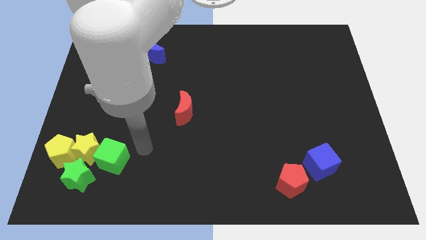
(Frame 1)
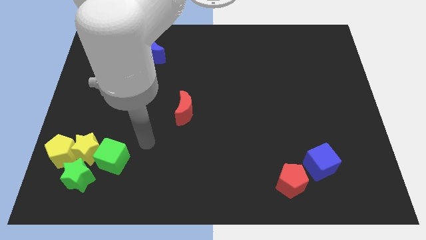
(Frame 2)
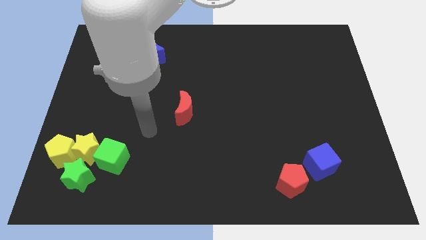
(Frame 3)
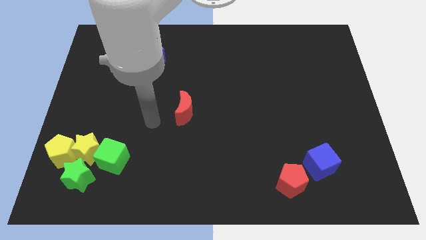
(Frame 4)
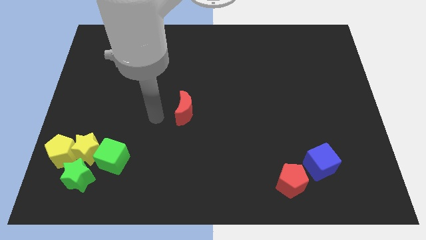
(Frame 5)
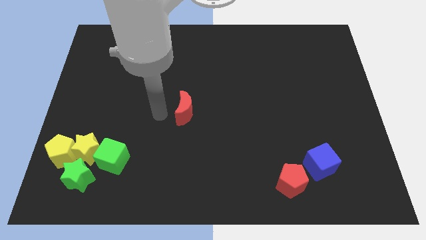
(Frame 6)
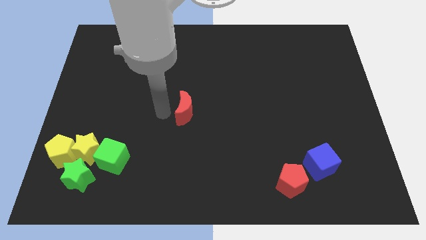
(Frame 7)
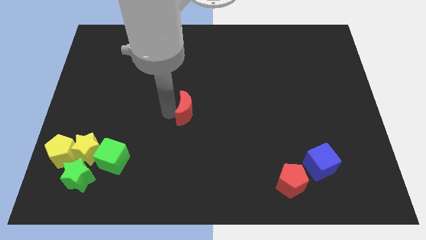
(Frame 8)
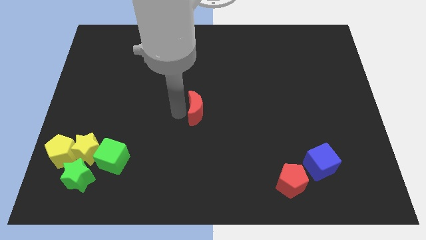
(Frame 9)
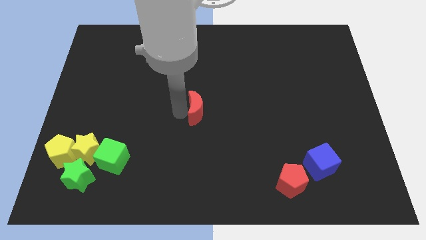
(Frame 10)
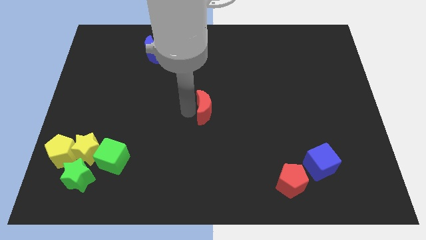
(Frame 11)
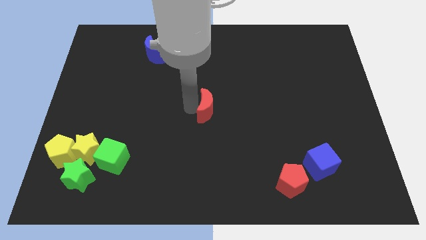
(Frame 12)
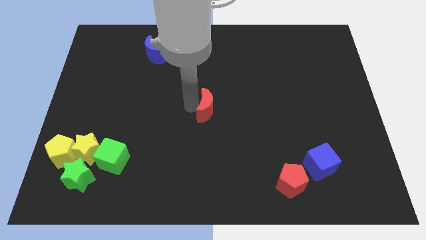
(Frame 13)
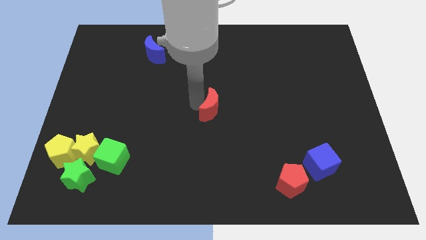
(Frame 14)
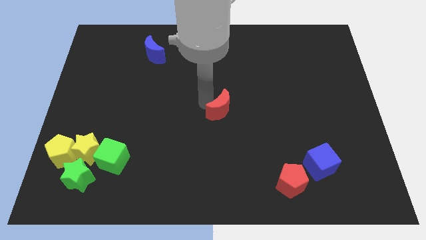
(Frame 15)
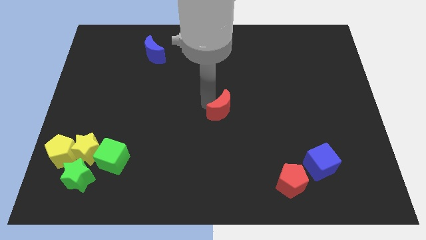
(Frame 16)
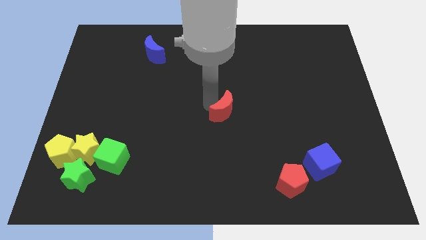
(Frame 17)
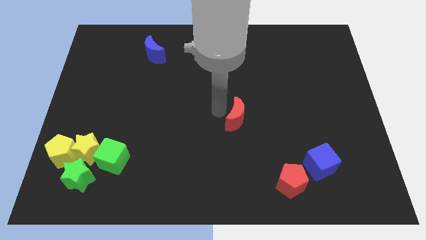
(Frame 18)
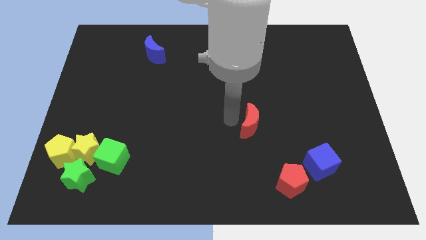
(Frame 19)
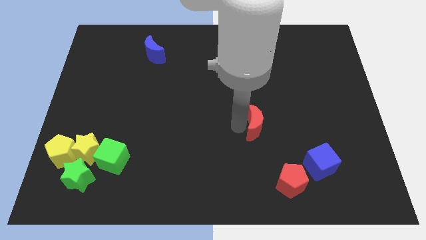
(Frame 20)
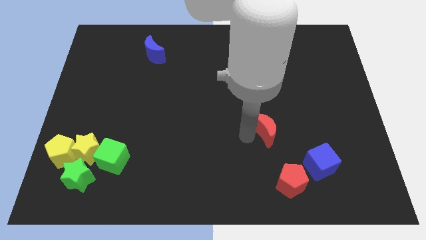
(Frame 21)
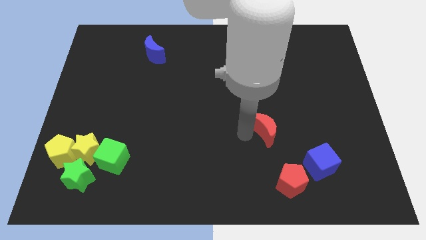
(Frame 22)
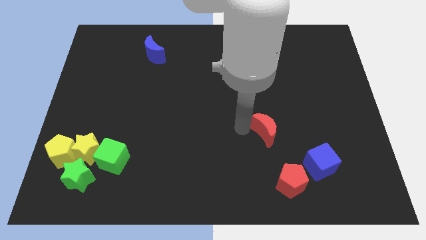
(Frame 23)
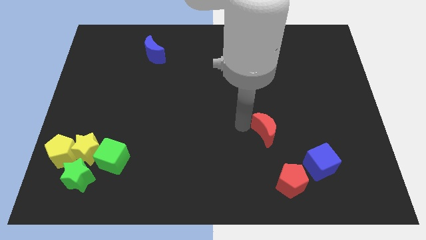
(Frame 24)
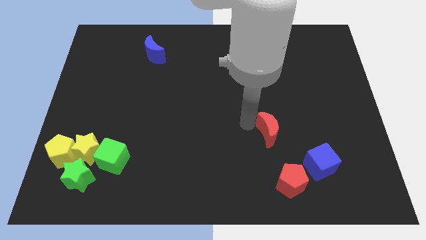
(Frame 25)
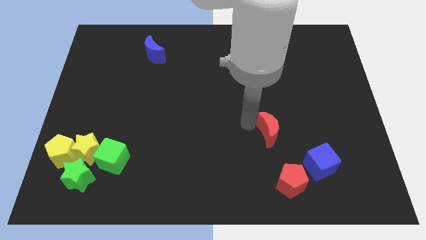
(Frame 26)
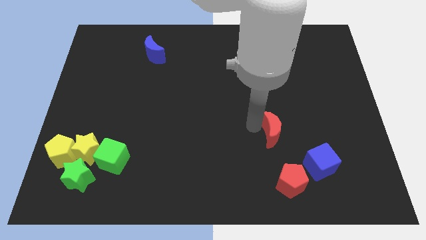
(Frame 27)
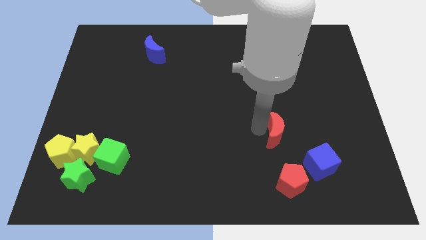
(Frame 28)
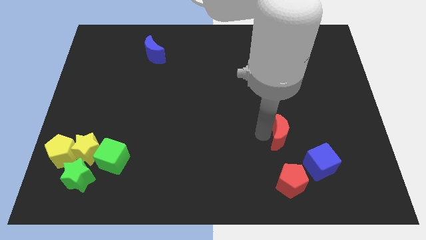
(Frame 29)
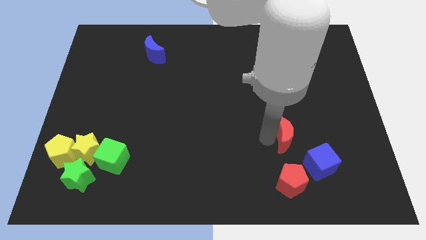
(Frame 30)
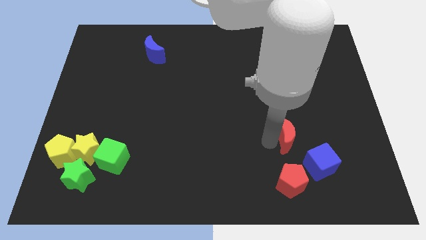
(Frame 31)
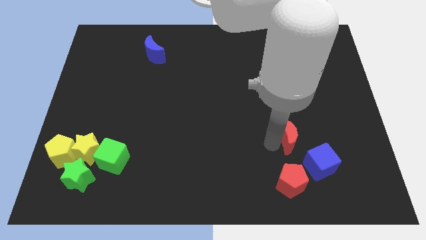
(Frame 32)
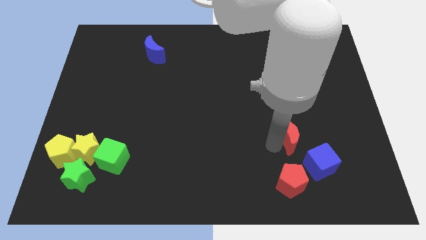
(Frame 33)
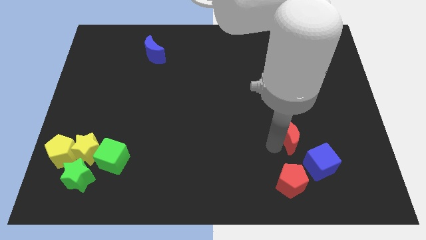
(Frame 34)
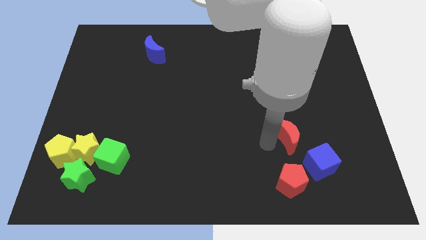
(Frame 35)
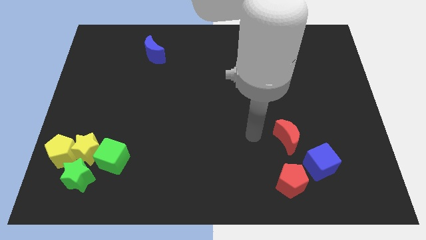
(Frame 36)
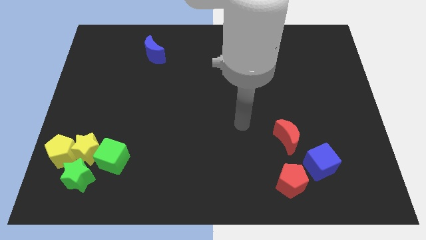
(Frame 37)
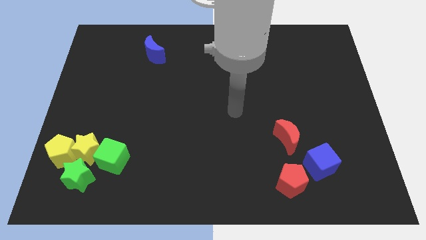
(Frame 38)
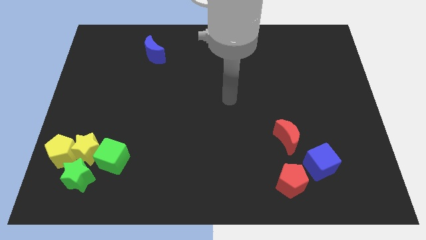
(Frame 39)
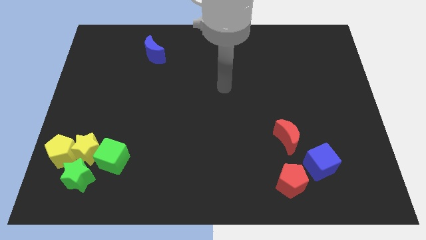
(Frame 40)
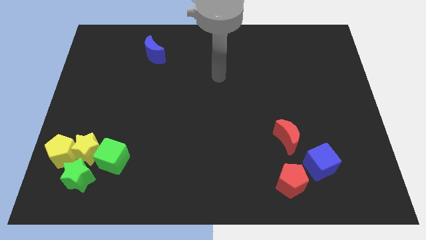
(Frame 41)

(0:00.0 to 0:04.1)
put the red crescent on top left side of the blue cube

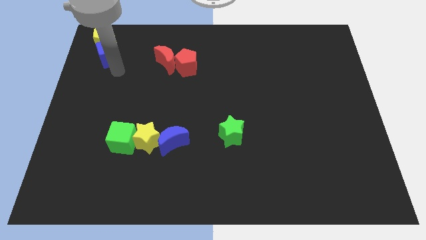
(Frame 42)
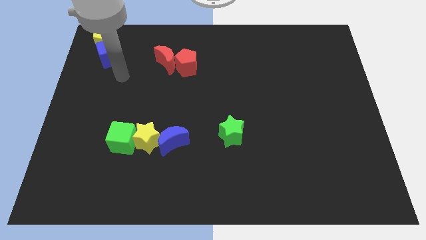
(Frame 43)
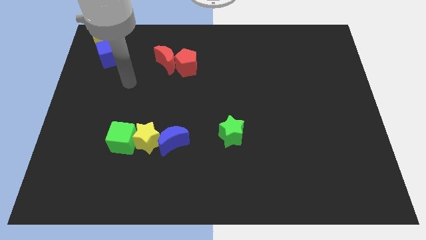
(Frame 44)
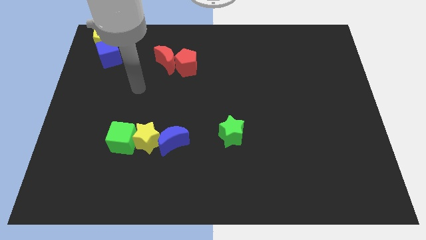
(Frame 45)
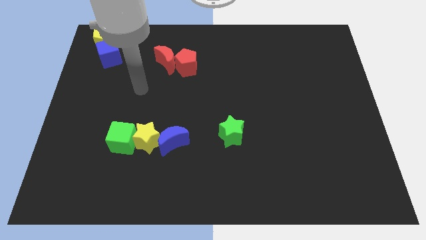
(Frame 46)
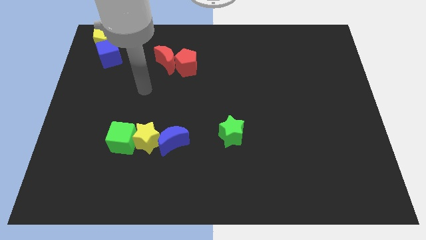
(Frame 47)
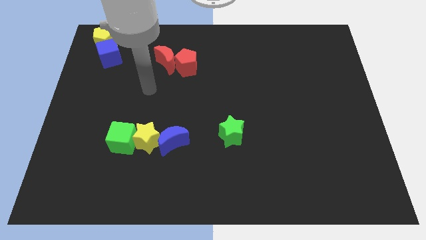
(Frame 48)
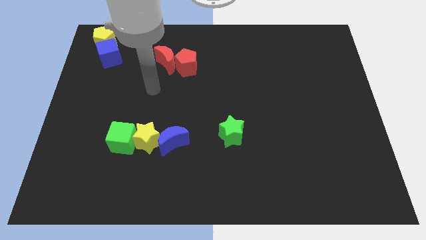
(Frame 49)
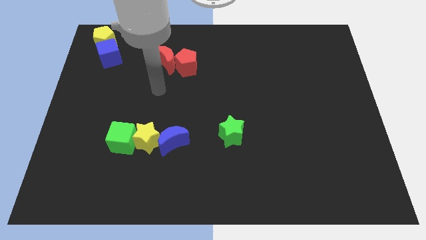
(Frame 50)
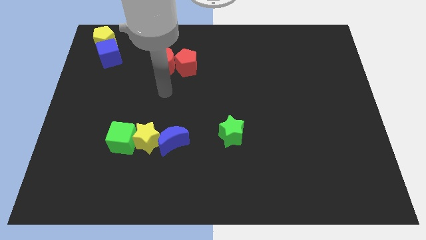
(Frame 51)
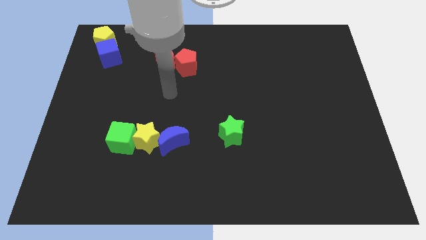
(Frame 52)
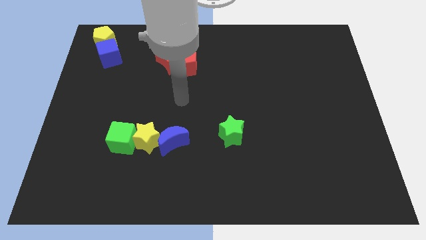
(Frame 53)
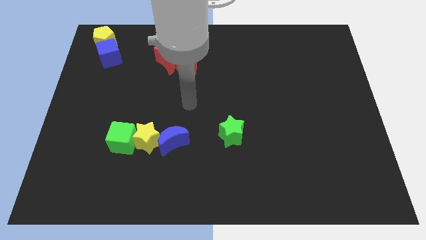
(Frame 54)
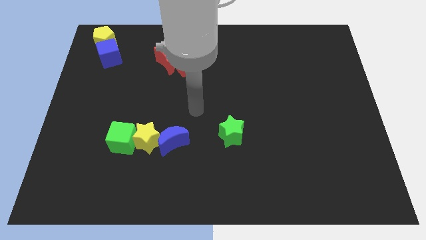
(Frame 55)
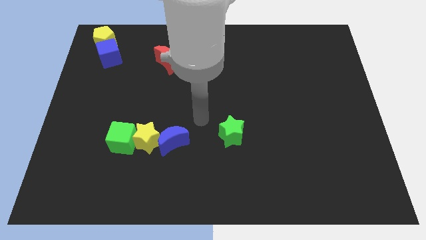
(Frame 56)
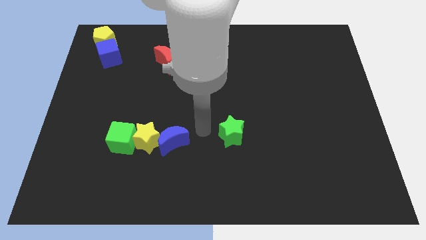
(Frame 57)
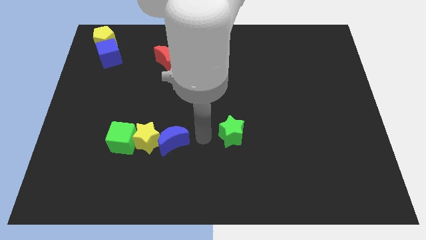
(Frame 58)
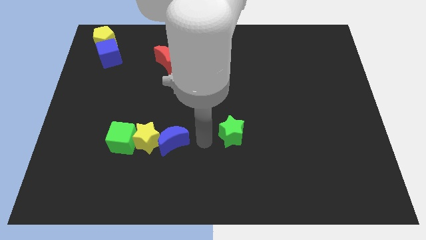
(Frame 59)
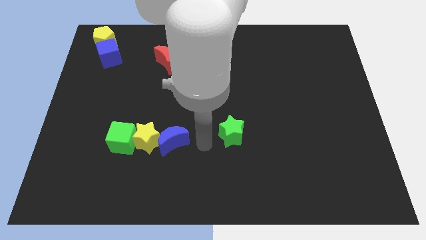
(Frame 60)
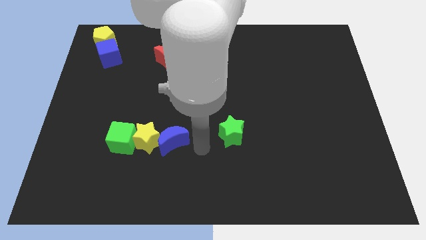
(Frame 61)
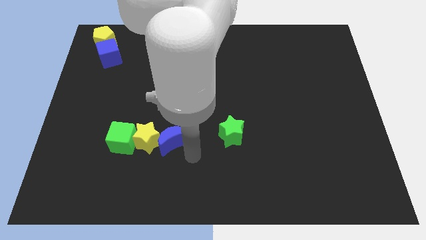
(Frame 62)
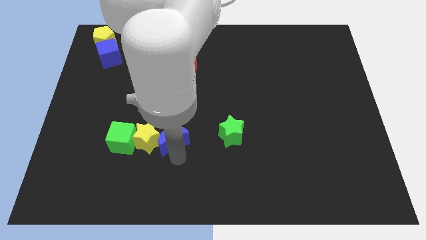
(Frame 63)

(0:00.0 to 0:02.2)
place the arm down to the blue moon

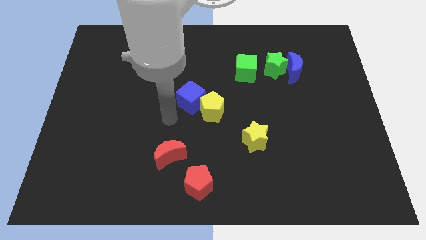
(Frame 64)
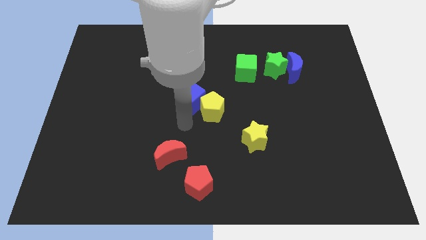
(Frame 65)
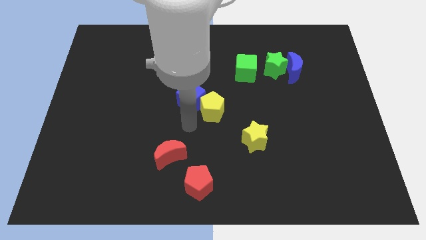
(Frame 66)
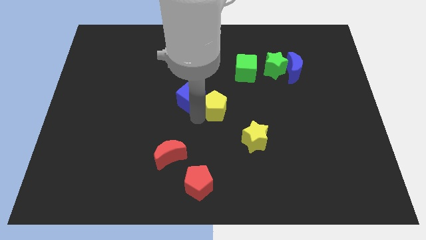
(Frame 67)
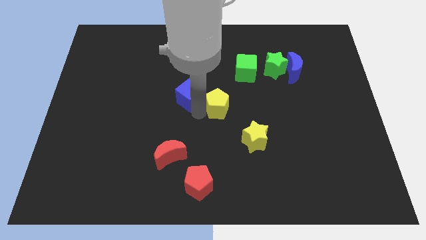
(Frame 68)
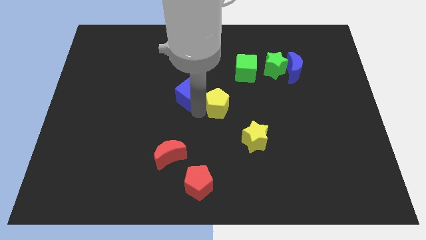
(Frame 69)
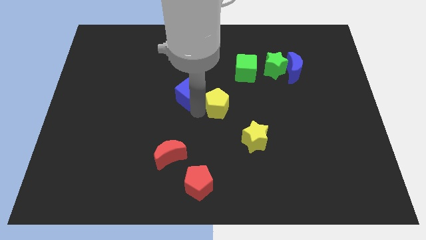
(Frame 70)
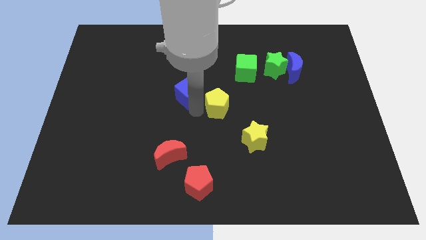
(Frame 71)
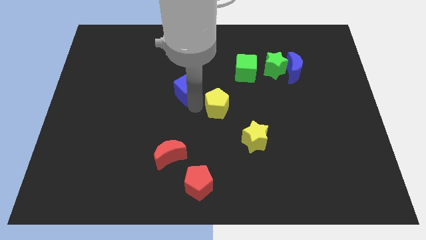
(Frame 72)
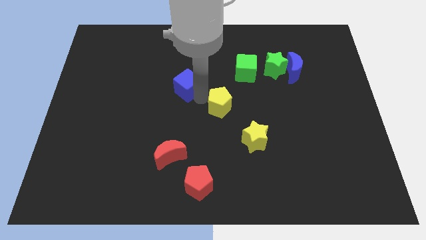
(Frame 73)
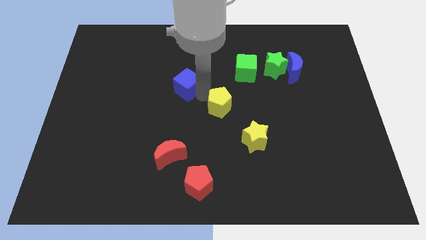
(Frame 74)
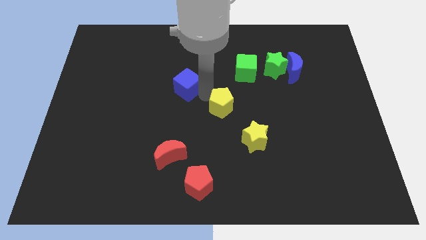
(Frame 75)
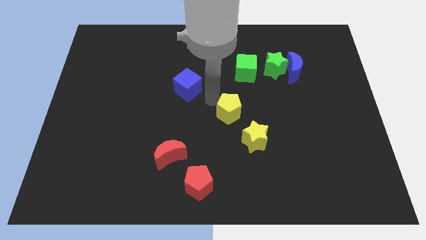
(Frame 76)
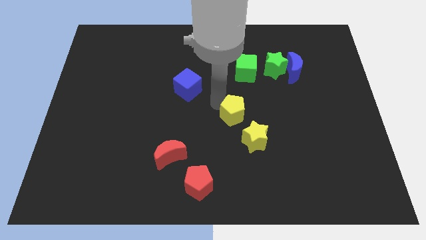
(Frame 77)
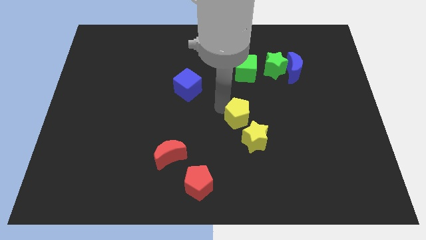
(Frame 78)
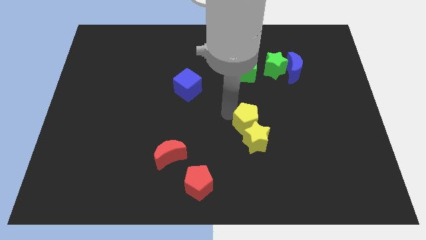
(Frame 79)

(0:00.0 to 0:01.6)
push yellow pentagon in to yellow star

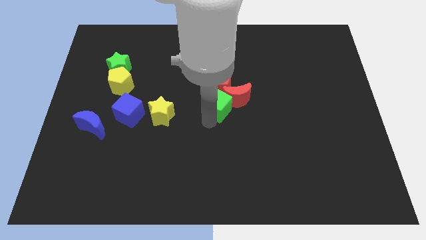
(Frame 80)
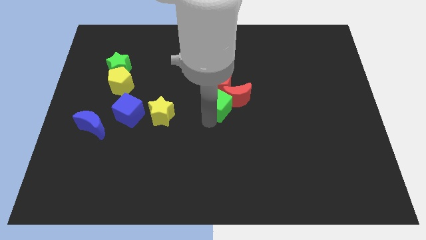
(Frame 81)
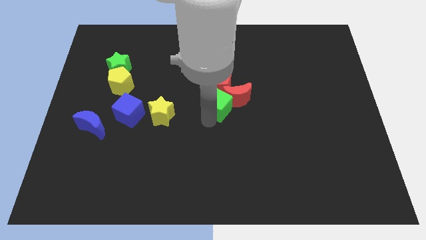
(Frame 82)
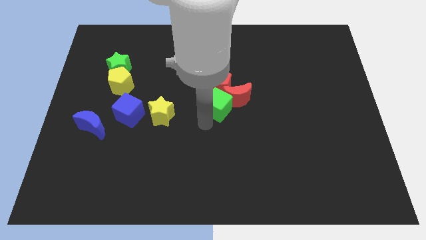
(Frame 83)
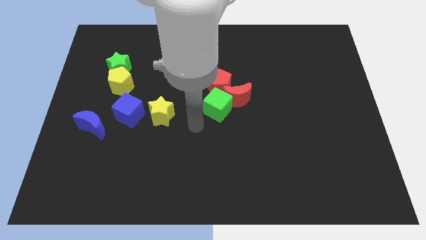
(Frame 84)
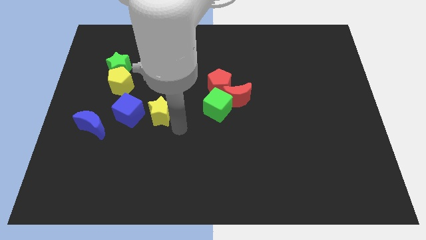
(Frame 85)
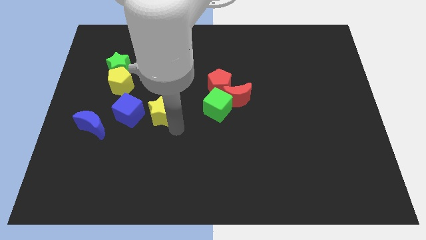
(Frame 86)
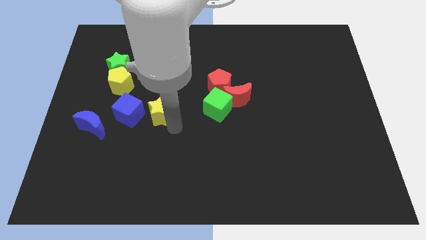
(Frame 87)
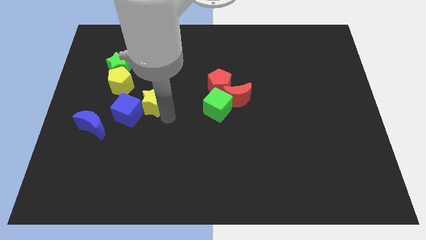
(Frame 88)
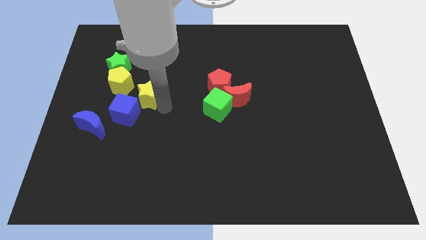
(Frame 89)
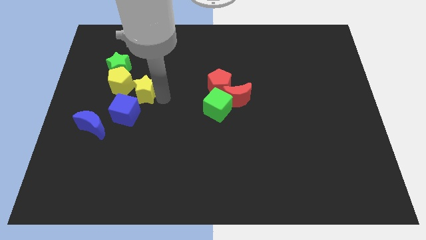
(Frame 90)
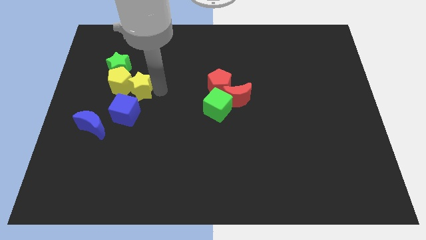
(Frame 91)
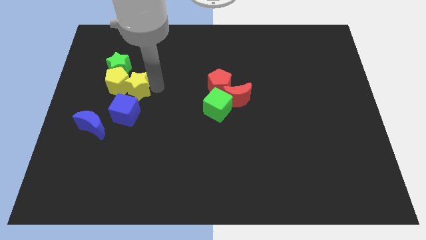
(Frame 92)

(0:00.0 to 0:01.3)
attach the yellow star to the yellow pentagon
